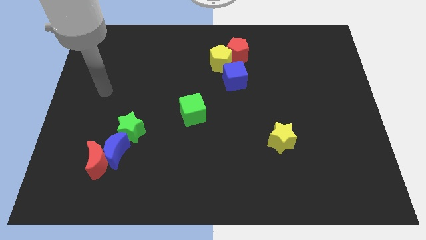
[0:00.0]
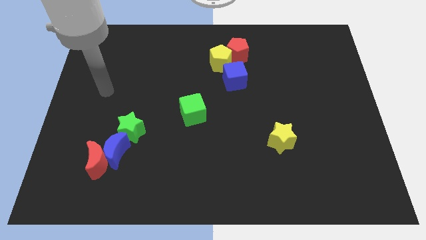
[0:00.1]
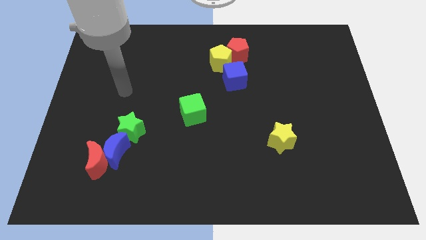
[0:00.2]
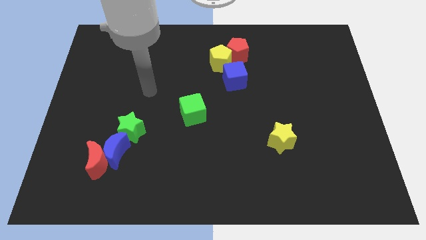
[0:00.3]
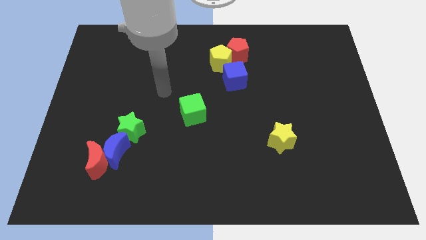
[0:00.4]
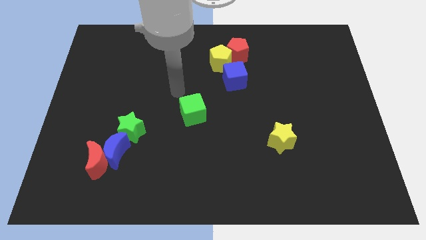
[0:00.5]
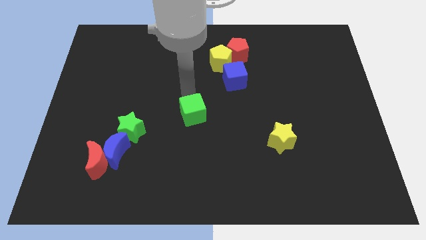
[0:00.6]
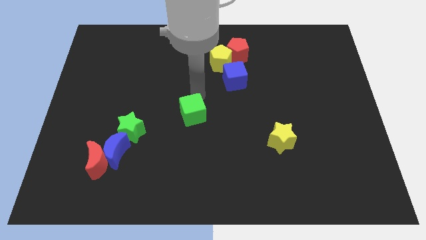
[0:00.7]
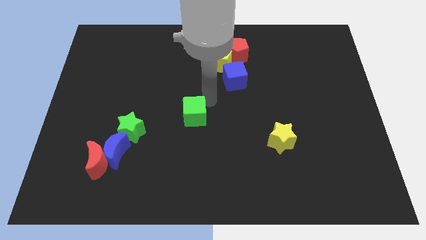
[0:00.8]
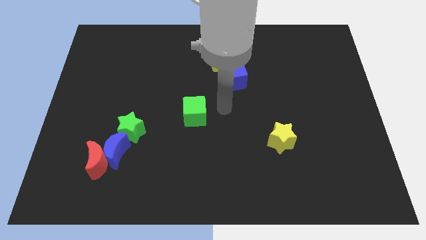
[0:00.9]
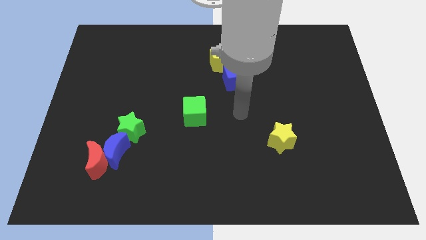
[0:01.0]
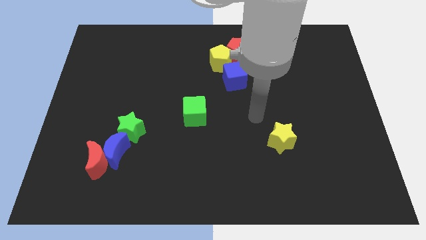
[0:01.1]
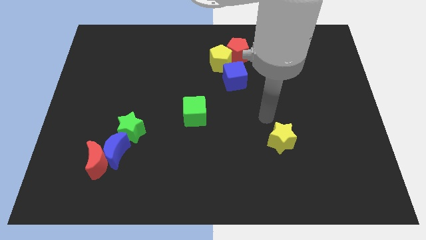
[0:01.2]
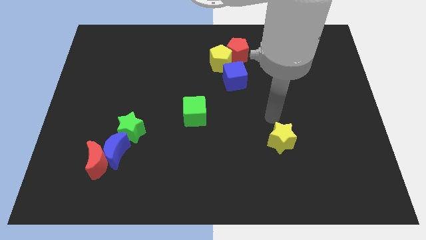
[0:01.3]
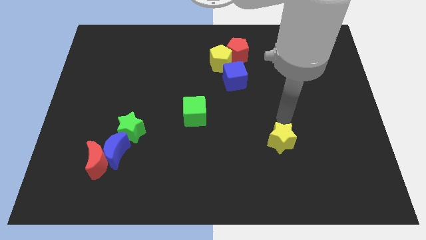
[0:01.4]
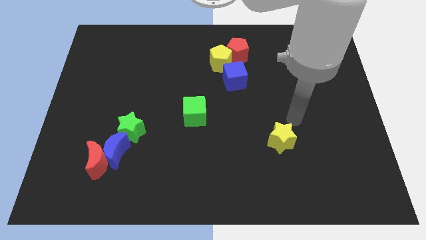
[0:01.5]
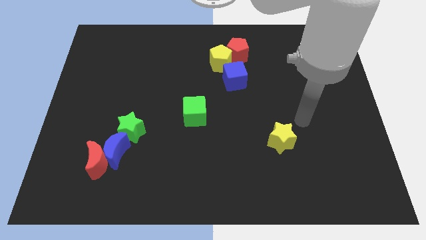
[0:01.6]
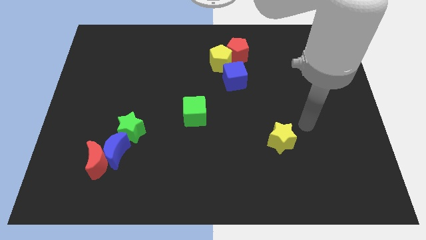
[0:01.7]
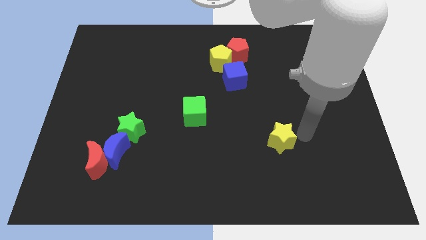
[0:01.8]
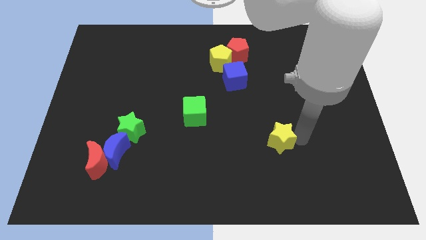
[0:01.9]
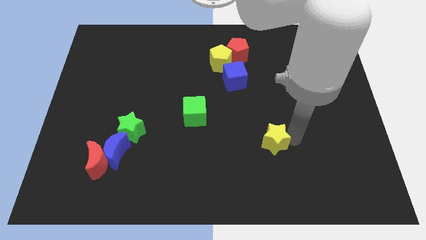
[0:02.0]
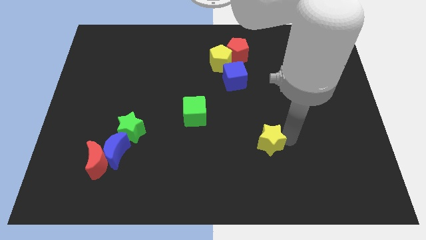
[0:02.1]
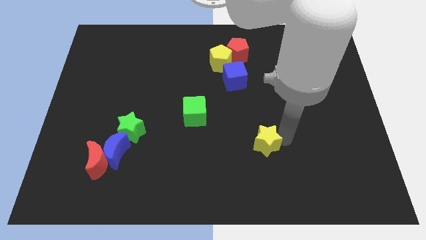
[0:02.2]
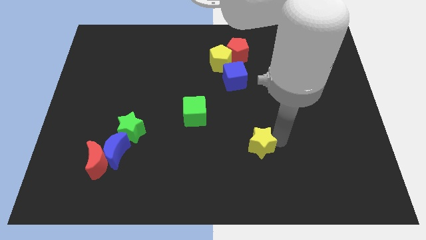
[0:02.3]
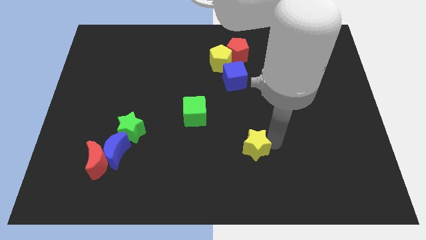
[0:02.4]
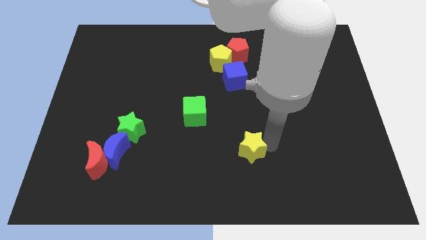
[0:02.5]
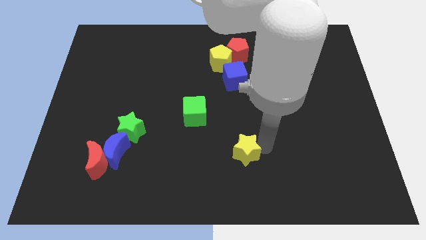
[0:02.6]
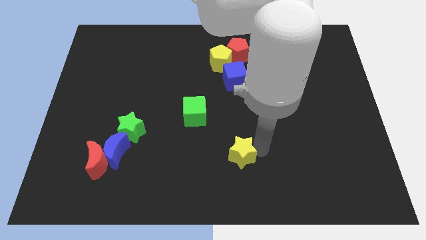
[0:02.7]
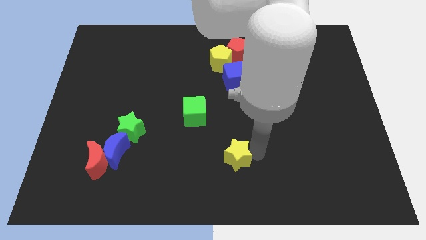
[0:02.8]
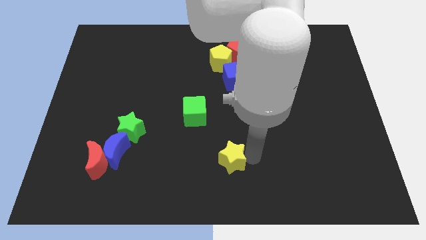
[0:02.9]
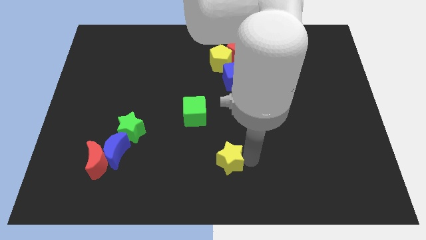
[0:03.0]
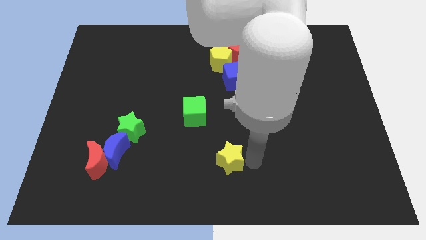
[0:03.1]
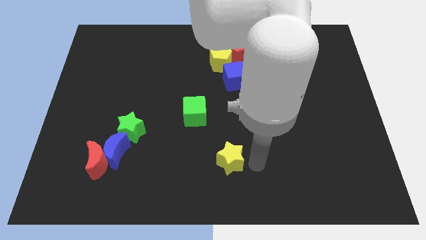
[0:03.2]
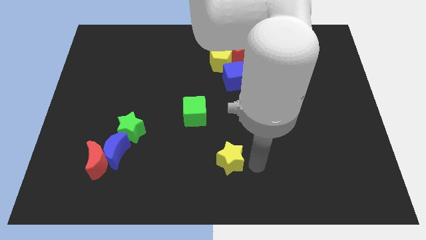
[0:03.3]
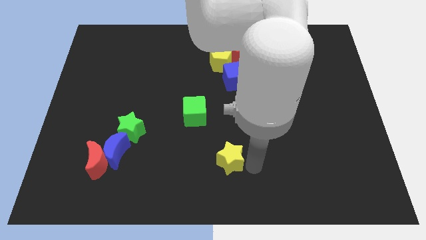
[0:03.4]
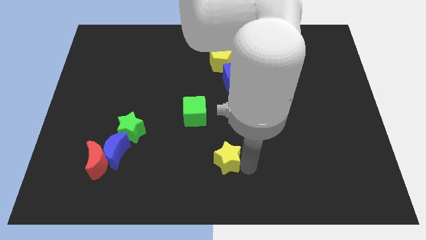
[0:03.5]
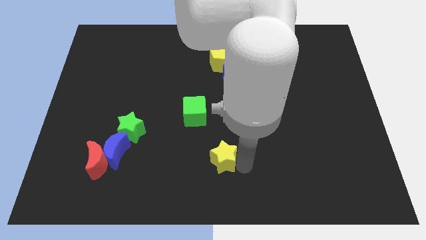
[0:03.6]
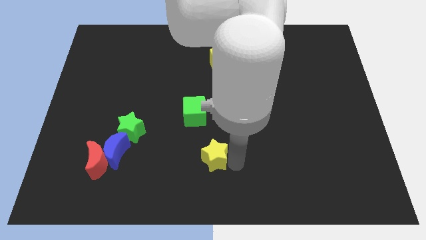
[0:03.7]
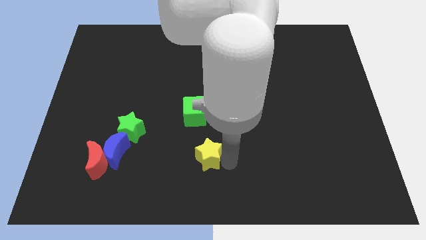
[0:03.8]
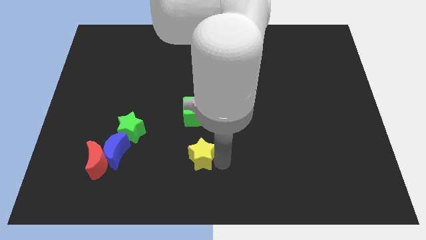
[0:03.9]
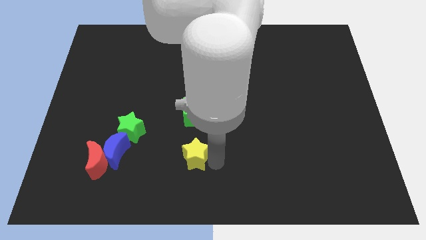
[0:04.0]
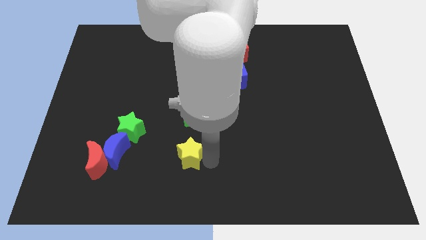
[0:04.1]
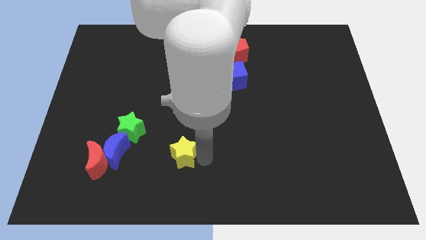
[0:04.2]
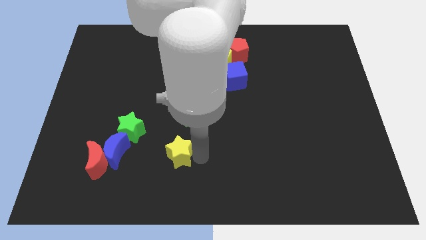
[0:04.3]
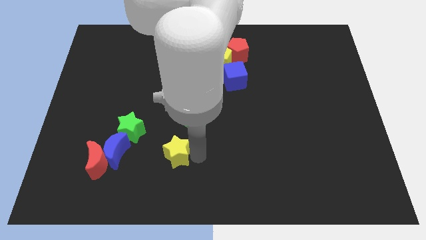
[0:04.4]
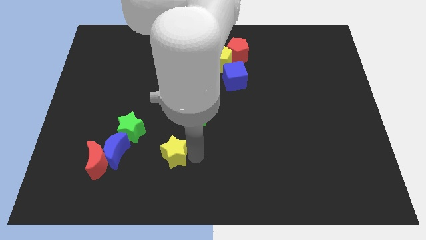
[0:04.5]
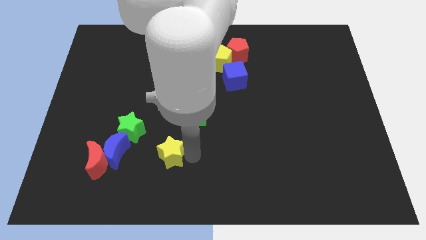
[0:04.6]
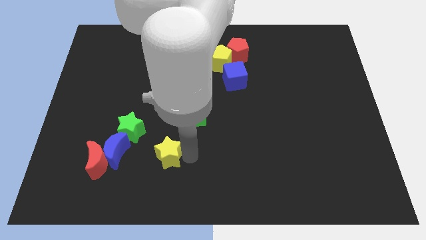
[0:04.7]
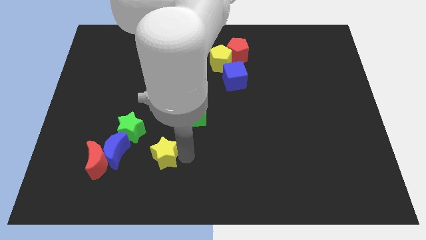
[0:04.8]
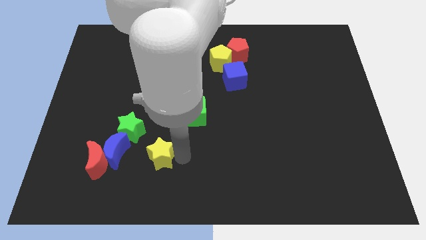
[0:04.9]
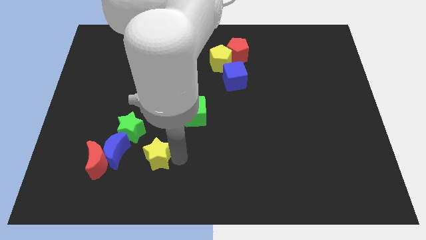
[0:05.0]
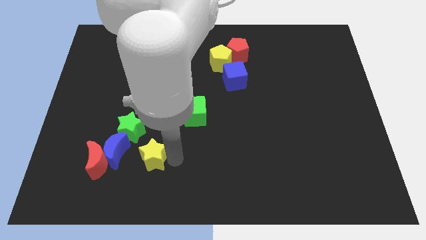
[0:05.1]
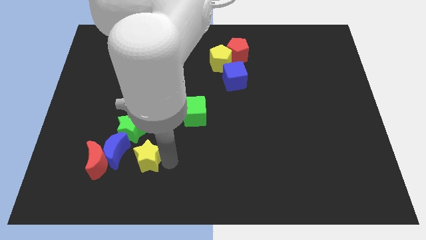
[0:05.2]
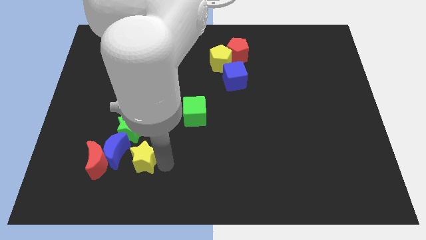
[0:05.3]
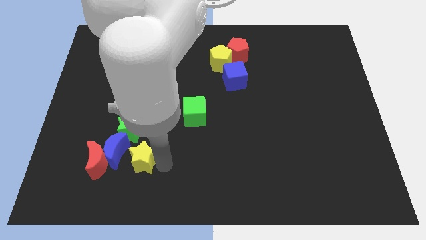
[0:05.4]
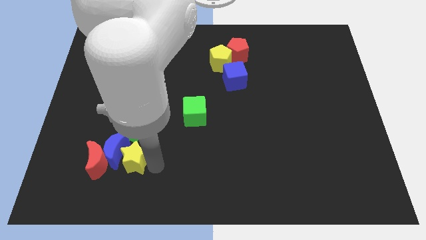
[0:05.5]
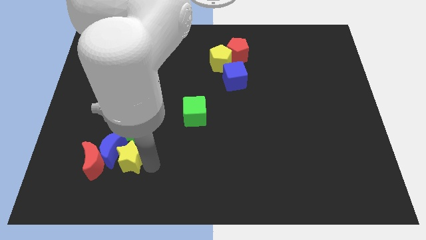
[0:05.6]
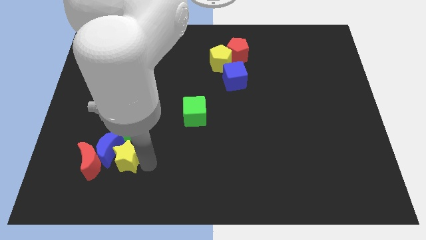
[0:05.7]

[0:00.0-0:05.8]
put the yellow star towards the blue moon

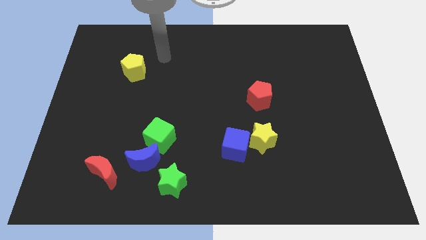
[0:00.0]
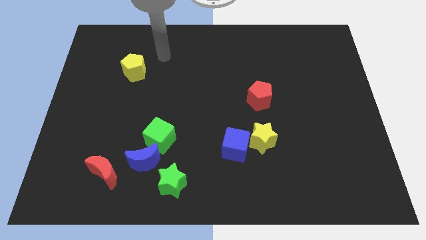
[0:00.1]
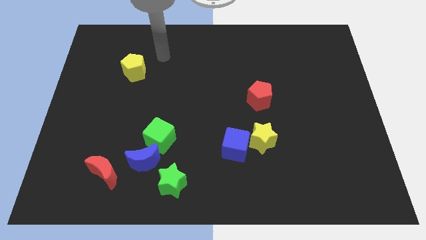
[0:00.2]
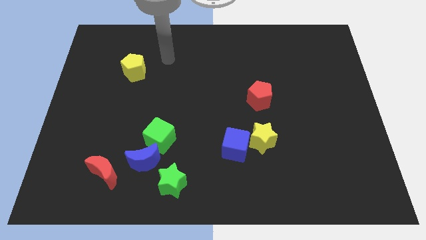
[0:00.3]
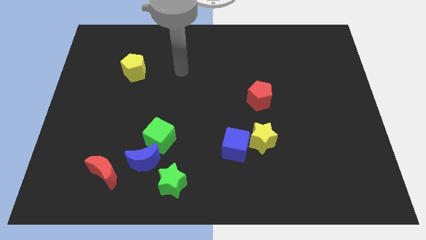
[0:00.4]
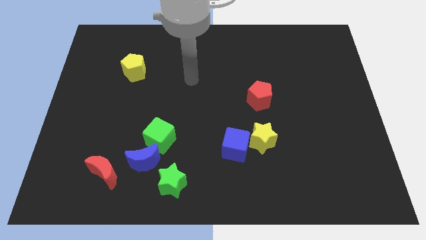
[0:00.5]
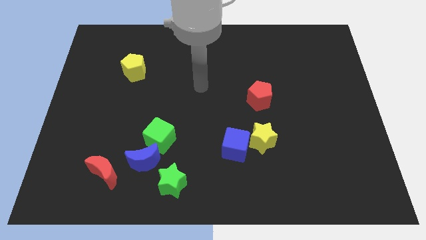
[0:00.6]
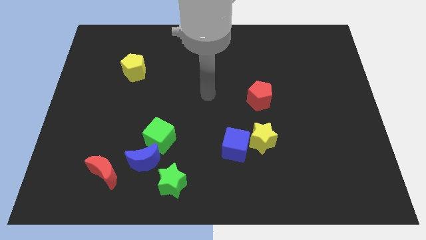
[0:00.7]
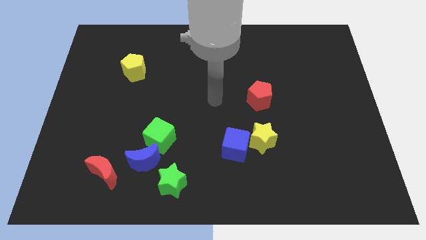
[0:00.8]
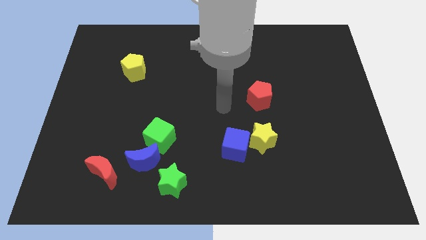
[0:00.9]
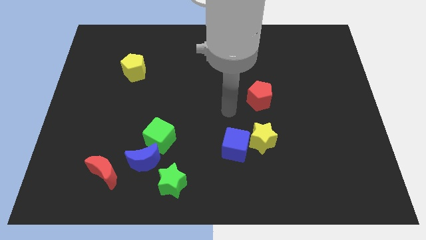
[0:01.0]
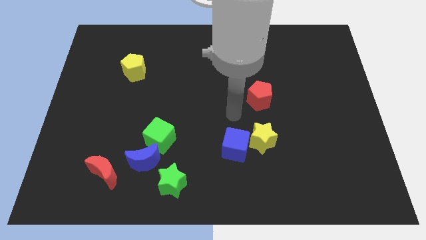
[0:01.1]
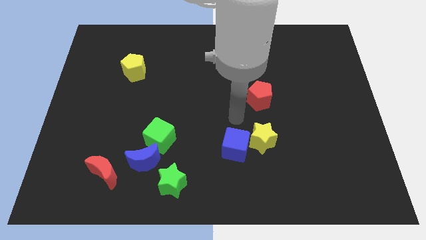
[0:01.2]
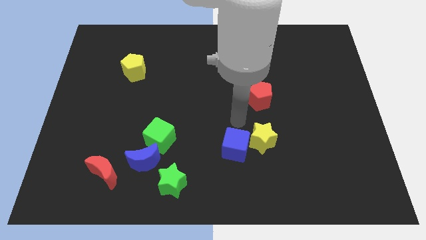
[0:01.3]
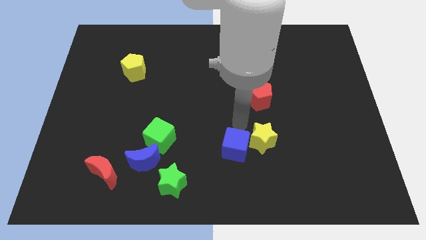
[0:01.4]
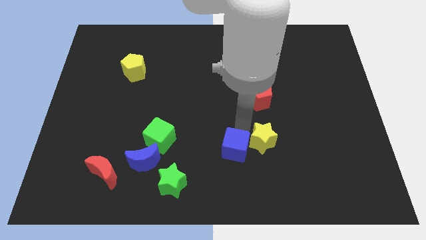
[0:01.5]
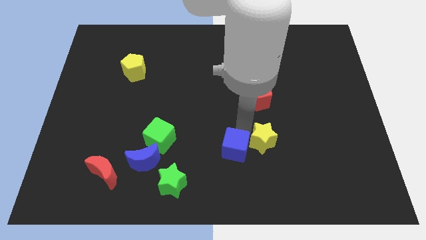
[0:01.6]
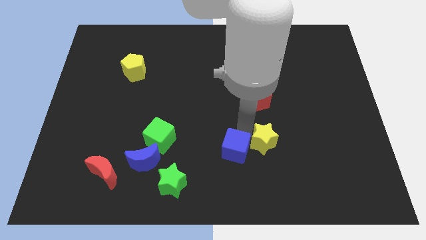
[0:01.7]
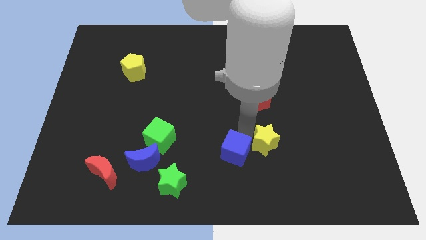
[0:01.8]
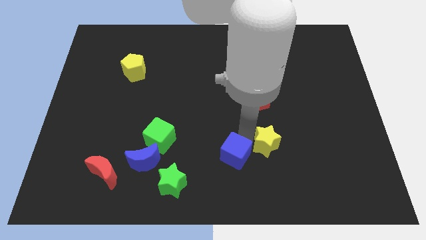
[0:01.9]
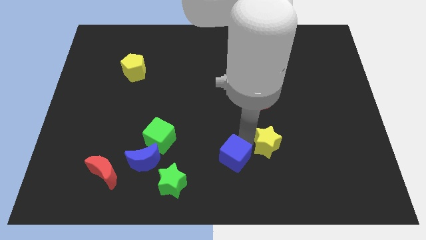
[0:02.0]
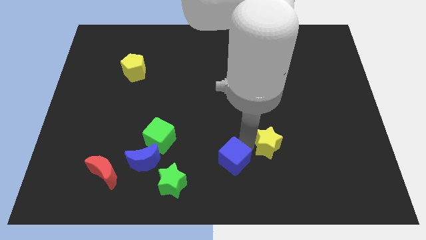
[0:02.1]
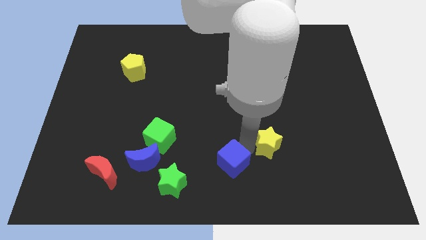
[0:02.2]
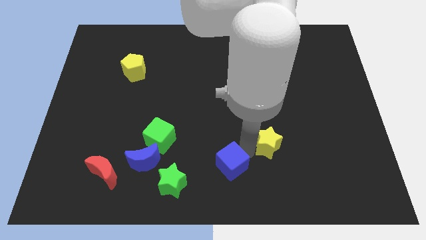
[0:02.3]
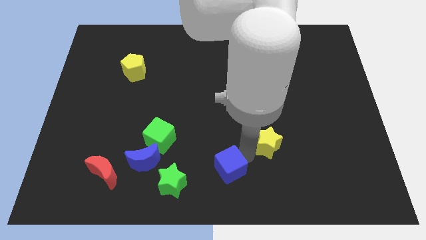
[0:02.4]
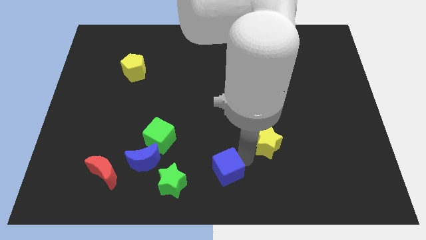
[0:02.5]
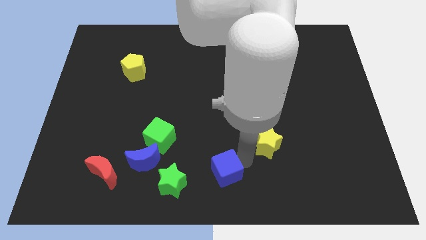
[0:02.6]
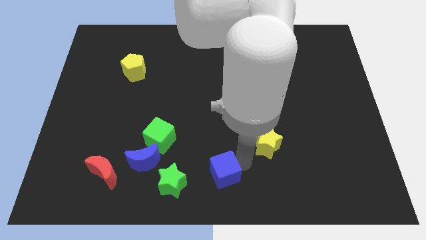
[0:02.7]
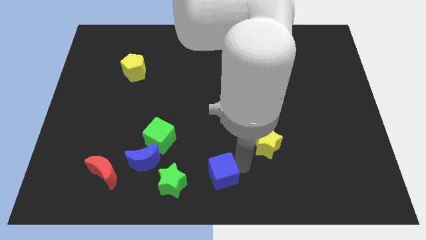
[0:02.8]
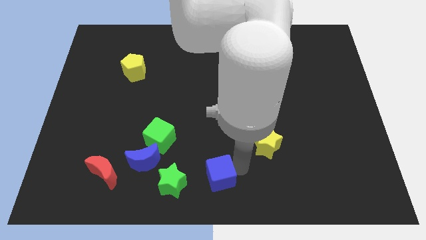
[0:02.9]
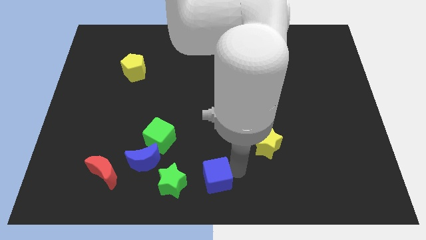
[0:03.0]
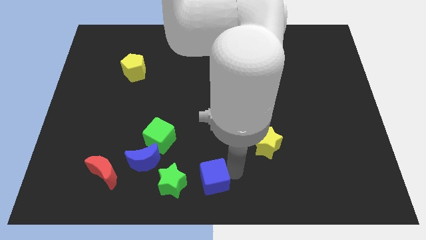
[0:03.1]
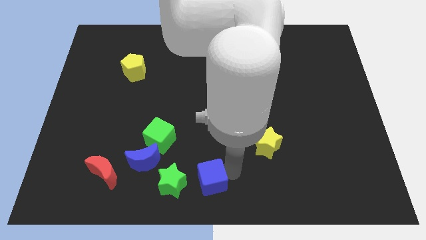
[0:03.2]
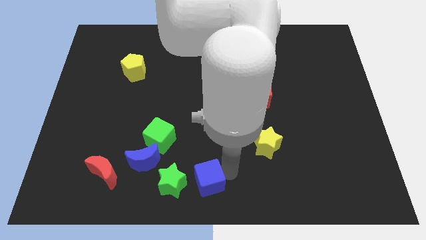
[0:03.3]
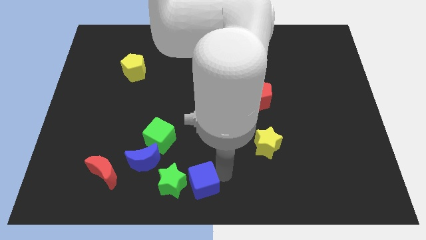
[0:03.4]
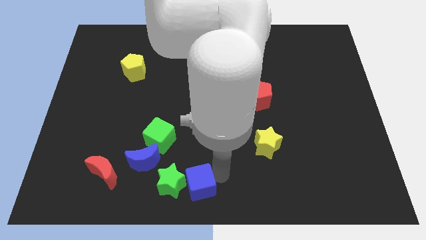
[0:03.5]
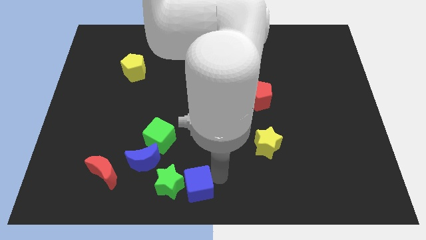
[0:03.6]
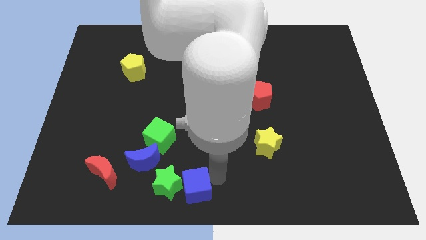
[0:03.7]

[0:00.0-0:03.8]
move the blue cube to the green star
